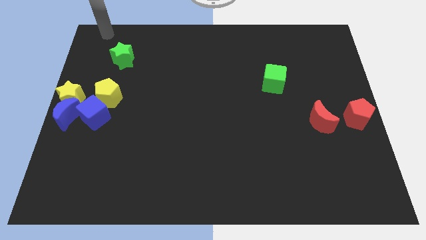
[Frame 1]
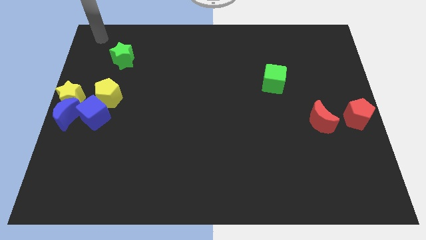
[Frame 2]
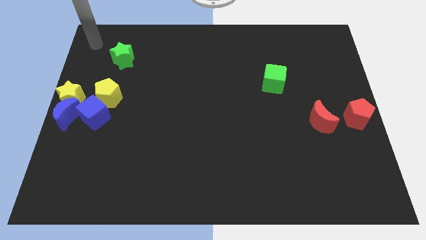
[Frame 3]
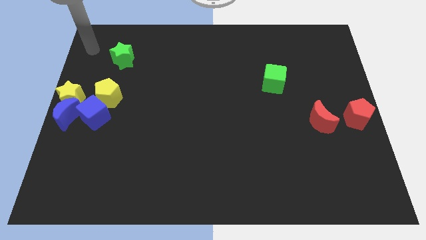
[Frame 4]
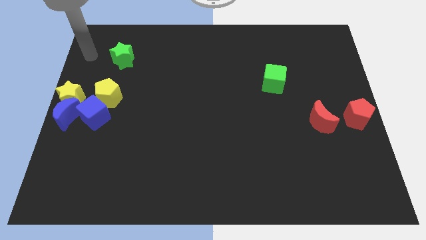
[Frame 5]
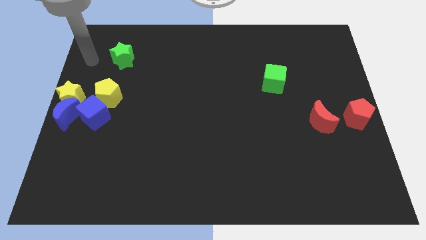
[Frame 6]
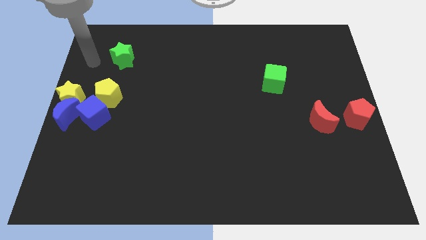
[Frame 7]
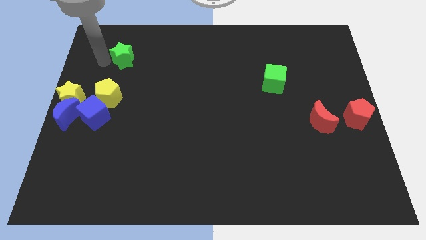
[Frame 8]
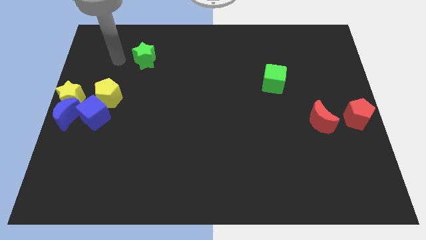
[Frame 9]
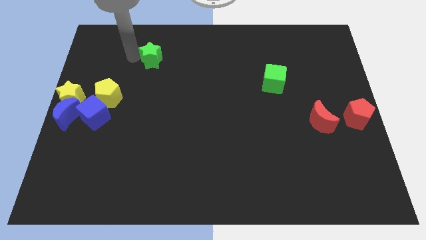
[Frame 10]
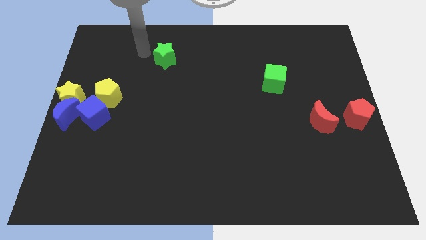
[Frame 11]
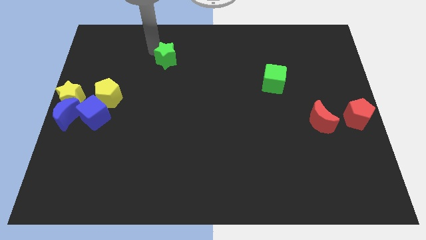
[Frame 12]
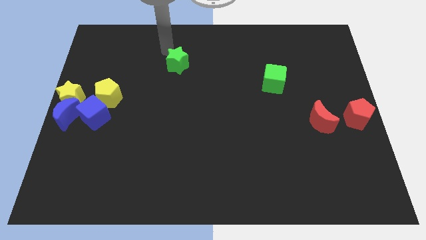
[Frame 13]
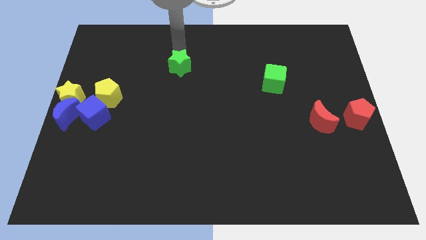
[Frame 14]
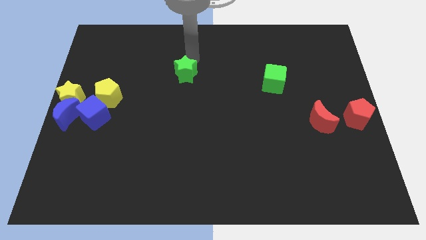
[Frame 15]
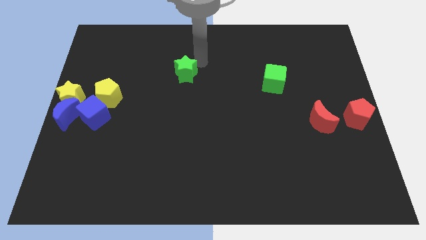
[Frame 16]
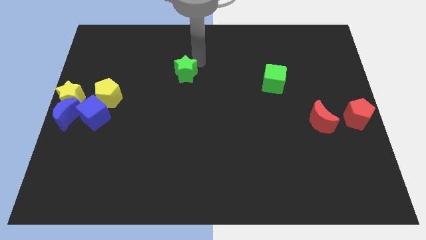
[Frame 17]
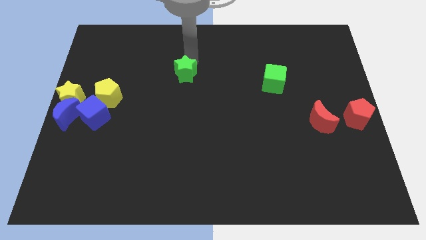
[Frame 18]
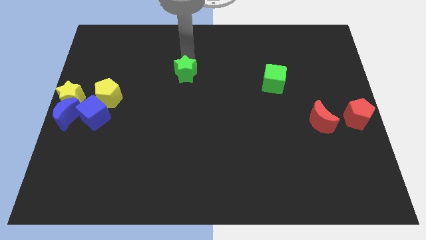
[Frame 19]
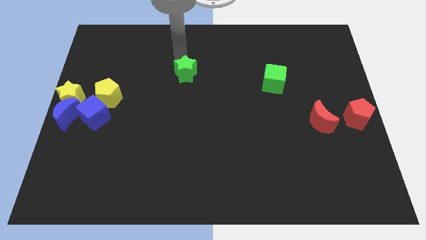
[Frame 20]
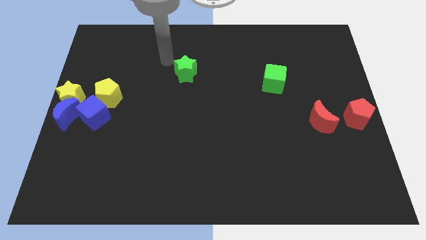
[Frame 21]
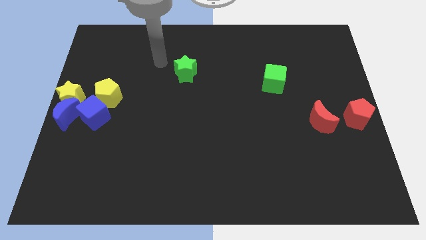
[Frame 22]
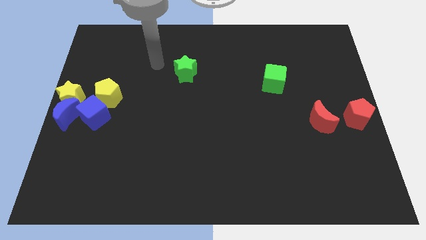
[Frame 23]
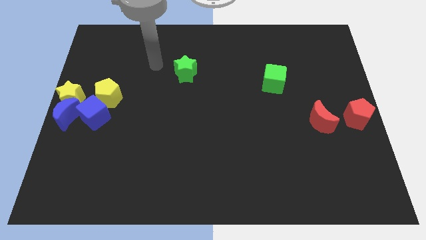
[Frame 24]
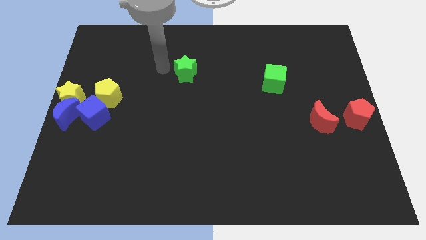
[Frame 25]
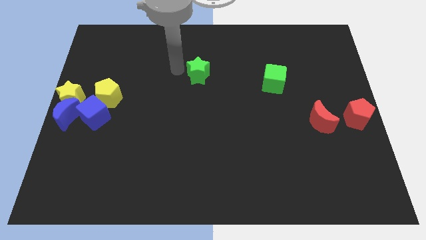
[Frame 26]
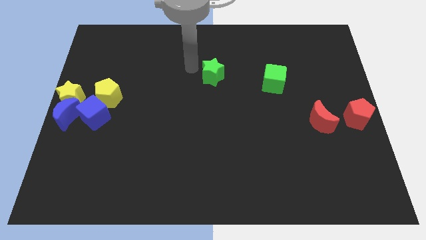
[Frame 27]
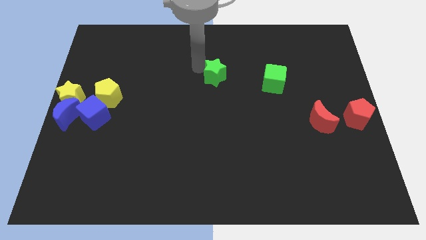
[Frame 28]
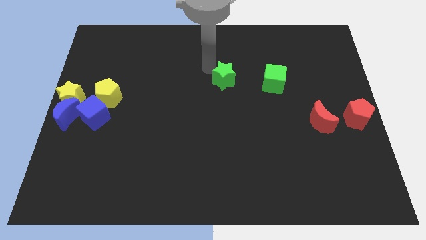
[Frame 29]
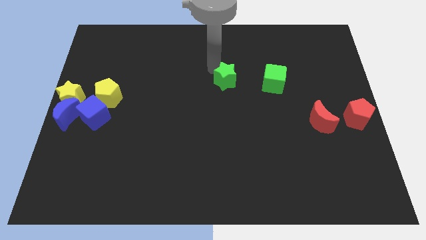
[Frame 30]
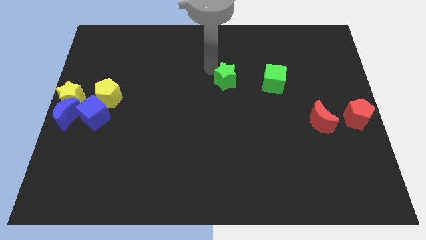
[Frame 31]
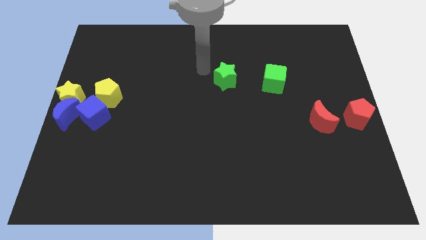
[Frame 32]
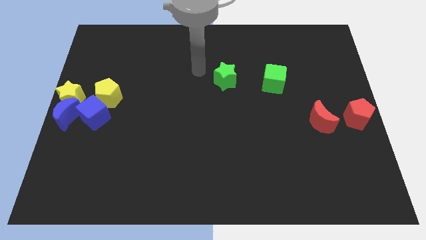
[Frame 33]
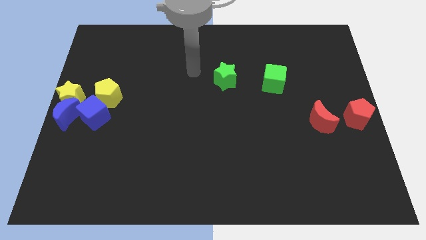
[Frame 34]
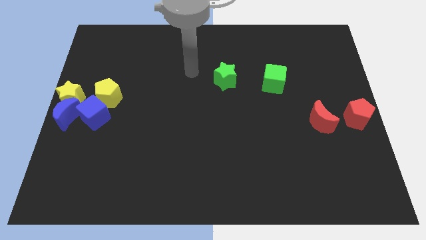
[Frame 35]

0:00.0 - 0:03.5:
place the green star left to the green cube

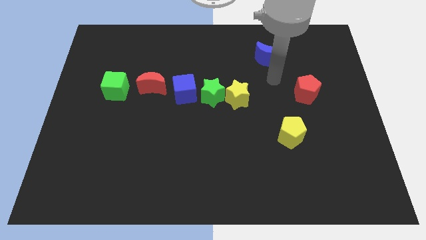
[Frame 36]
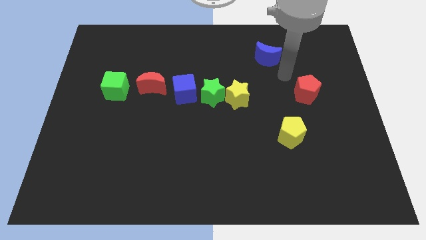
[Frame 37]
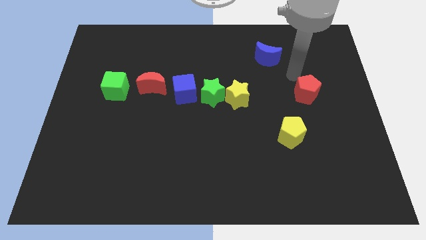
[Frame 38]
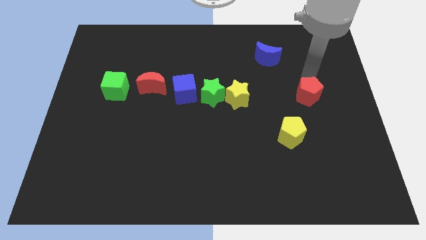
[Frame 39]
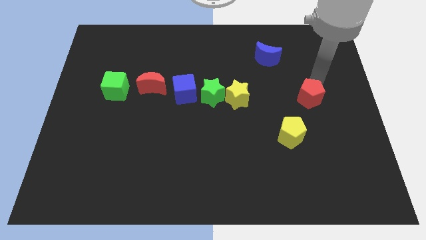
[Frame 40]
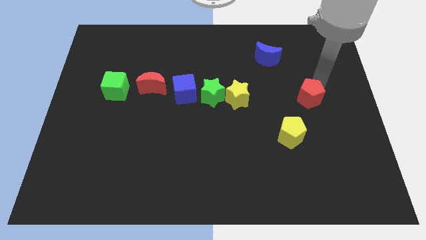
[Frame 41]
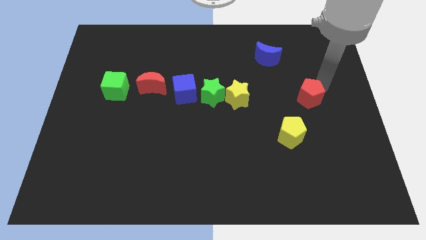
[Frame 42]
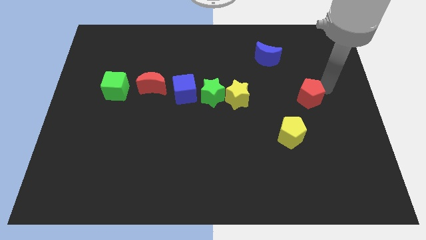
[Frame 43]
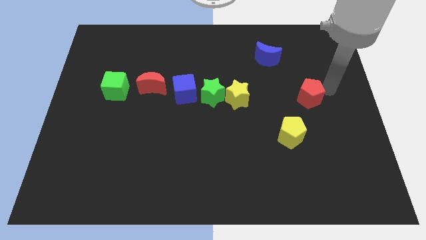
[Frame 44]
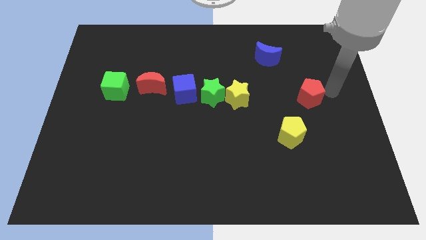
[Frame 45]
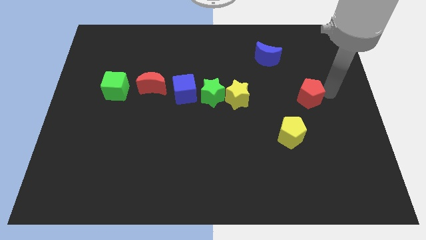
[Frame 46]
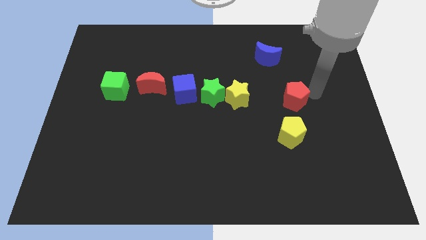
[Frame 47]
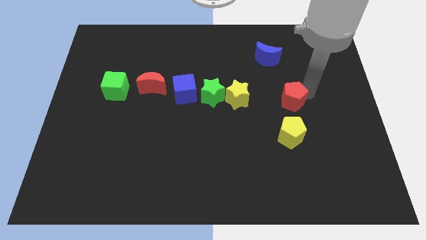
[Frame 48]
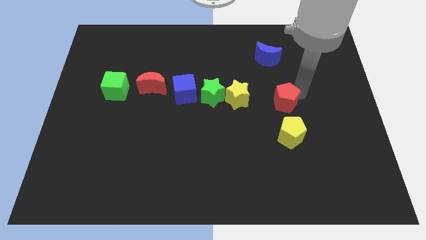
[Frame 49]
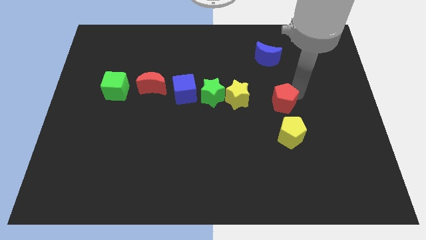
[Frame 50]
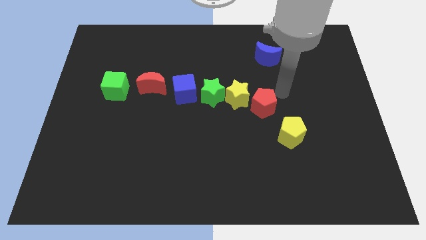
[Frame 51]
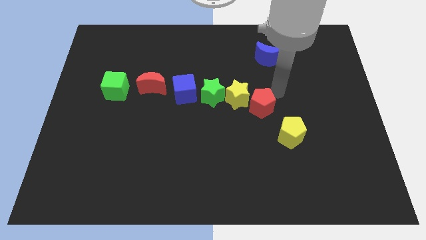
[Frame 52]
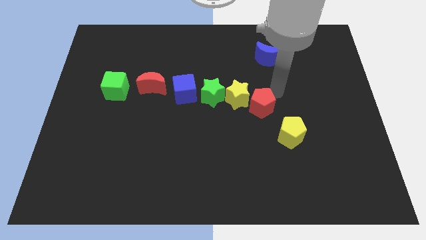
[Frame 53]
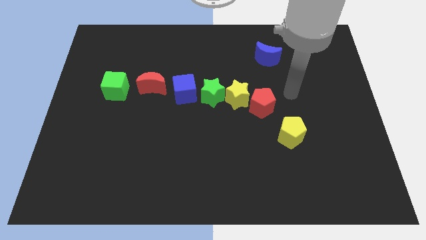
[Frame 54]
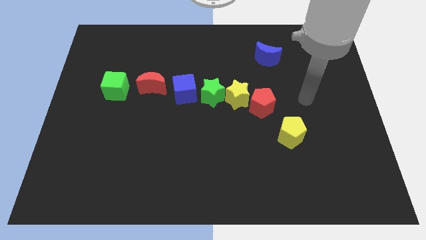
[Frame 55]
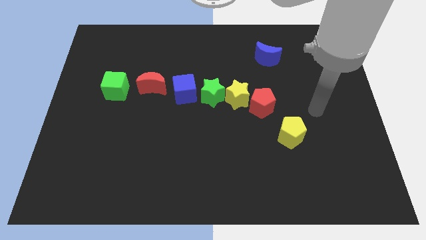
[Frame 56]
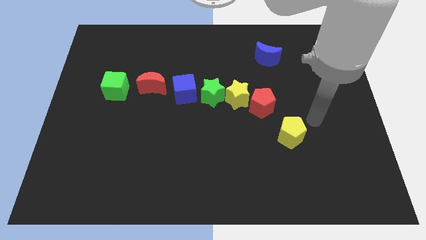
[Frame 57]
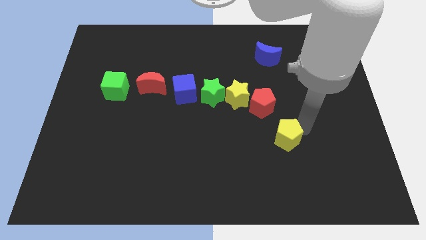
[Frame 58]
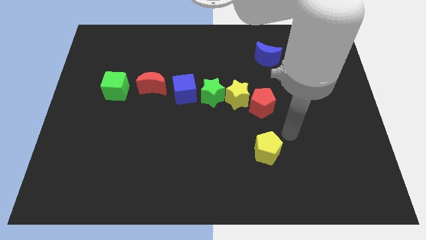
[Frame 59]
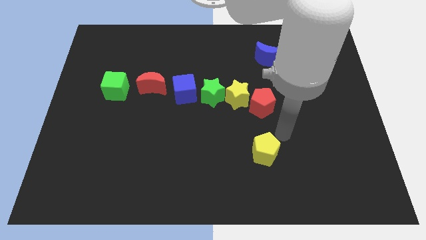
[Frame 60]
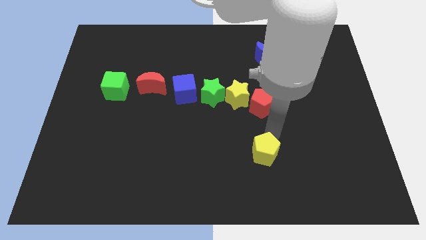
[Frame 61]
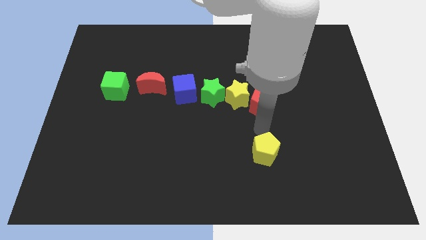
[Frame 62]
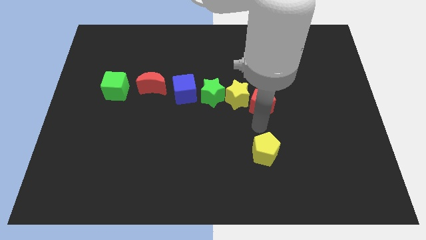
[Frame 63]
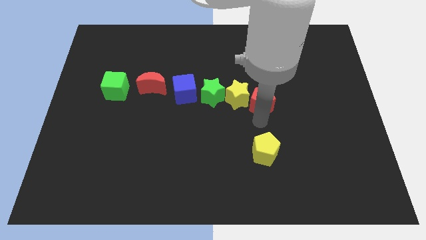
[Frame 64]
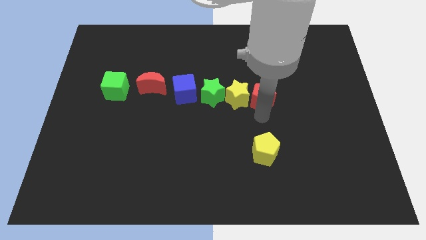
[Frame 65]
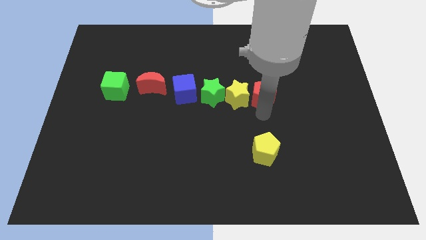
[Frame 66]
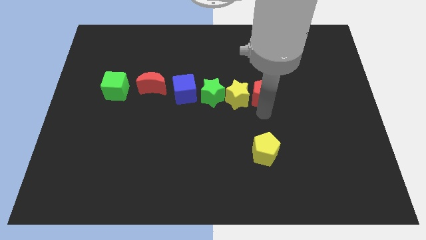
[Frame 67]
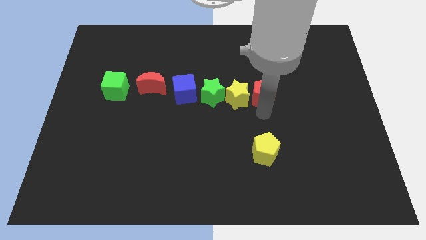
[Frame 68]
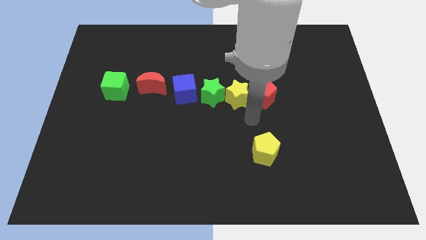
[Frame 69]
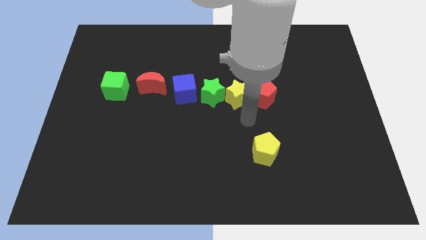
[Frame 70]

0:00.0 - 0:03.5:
put the red pentagon to the right of the yellow star

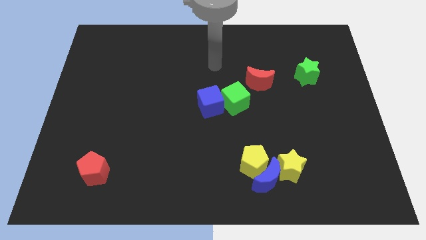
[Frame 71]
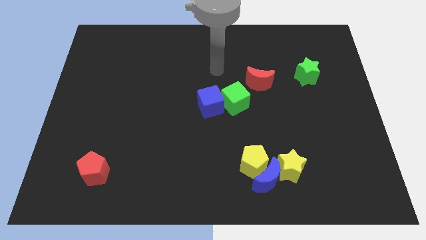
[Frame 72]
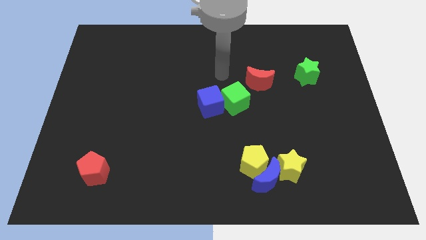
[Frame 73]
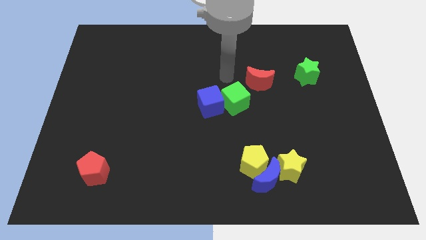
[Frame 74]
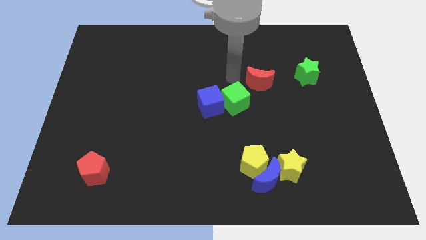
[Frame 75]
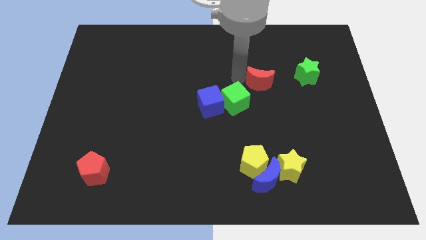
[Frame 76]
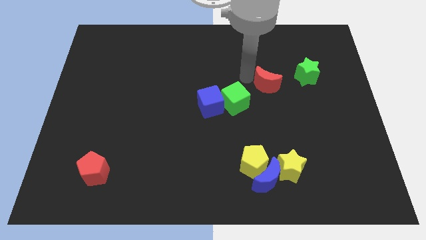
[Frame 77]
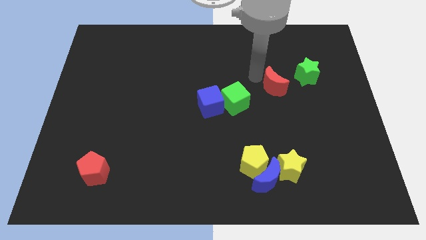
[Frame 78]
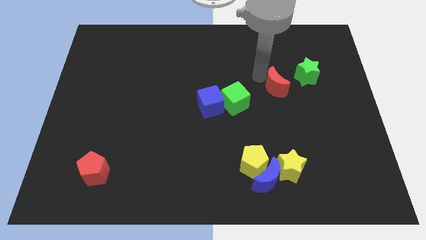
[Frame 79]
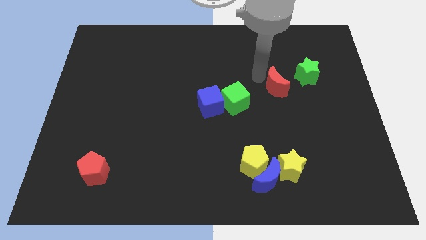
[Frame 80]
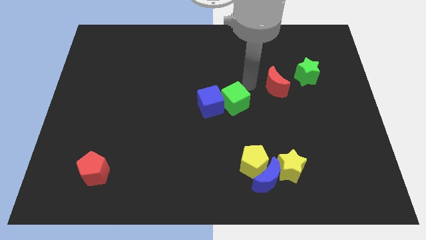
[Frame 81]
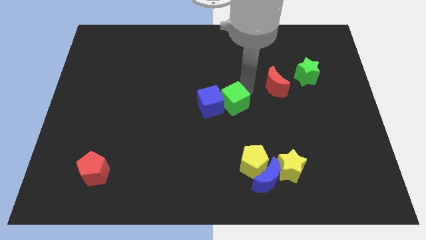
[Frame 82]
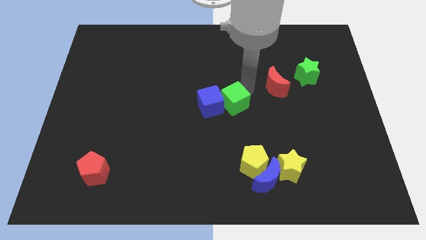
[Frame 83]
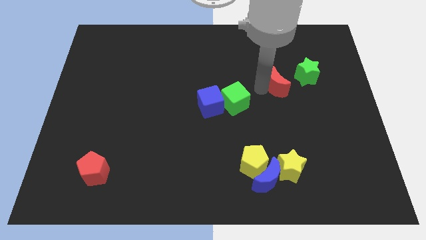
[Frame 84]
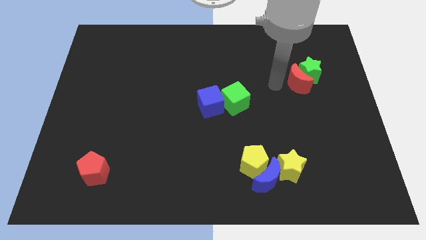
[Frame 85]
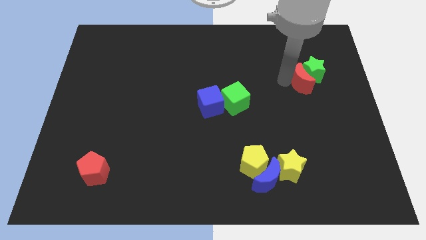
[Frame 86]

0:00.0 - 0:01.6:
push the red moon into the green star

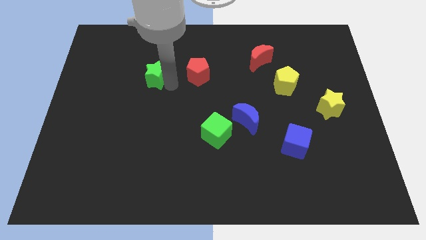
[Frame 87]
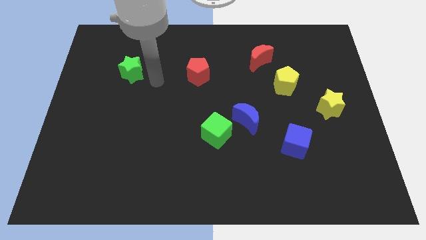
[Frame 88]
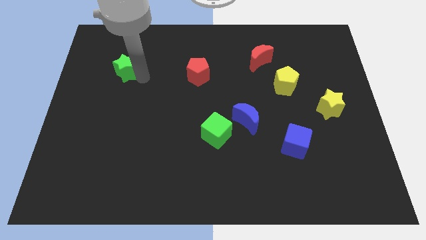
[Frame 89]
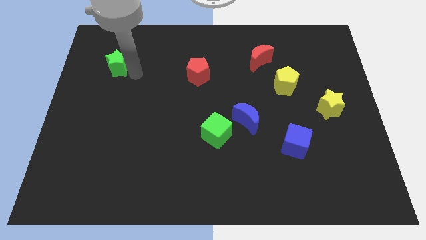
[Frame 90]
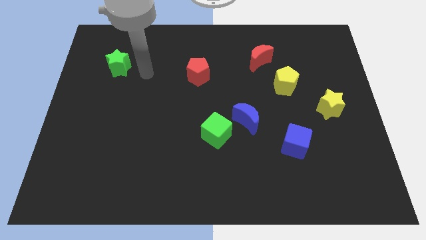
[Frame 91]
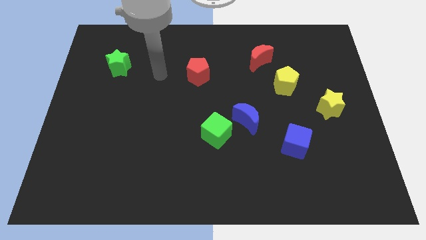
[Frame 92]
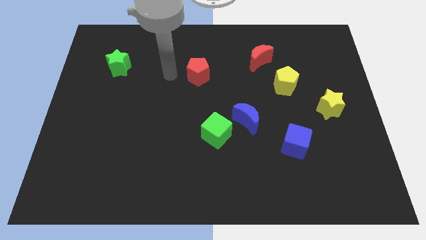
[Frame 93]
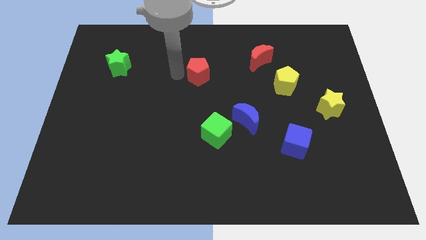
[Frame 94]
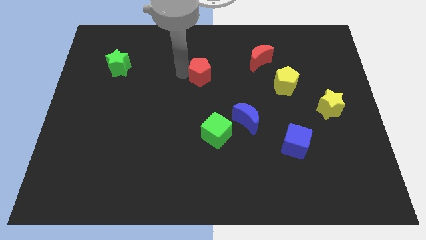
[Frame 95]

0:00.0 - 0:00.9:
point your arm left to red pentagon
